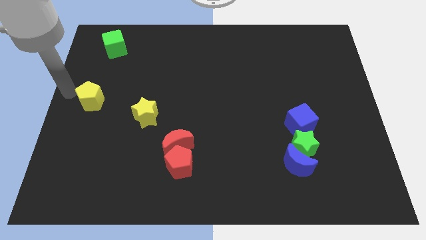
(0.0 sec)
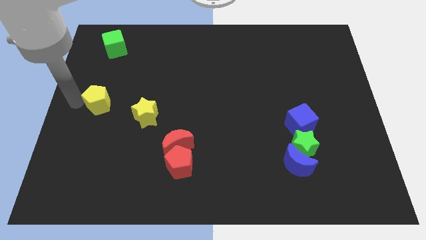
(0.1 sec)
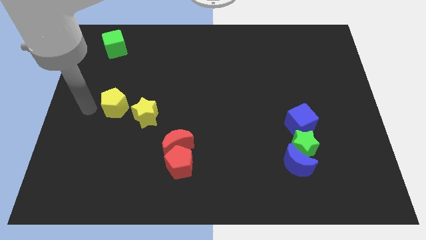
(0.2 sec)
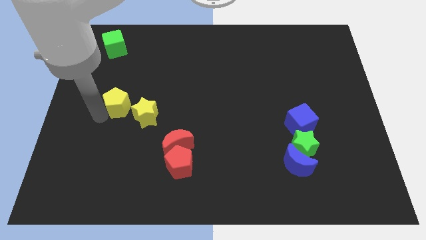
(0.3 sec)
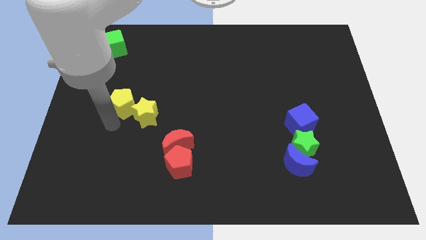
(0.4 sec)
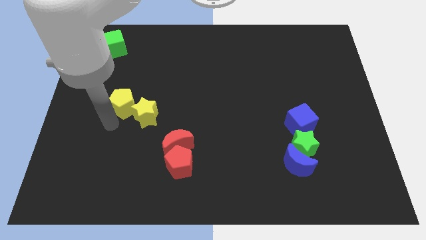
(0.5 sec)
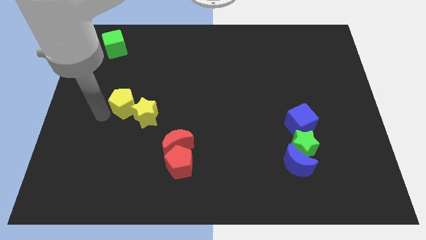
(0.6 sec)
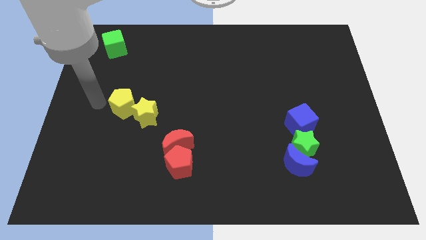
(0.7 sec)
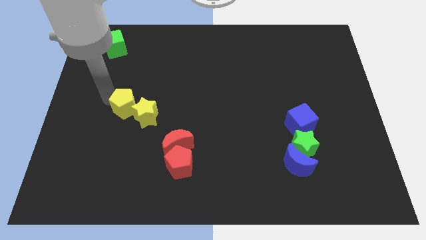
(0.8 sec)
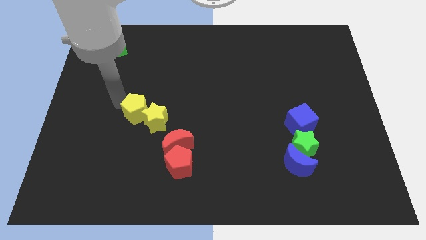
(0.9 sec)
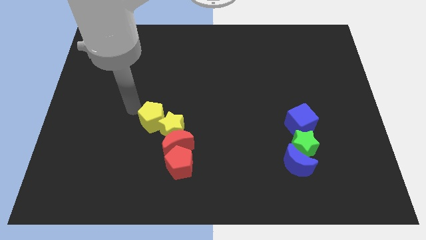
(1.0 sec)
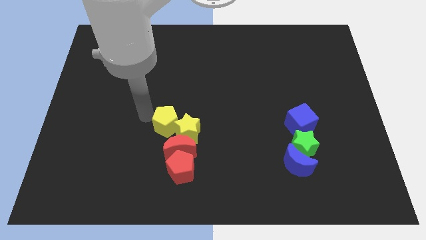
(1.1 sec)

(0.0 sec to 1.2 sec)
put yellow blocks together to the right of the board

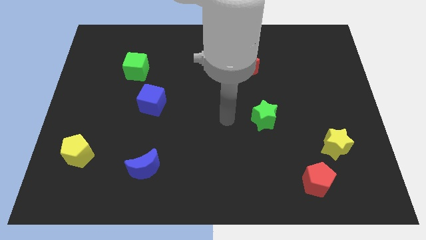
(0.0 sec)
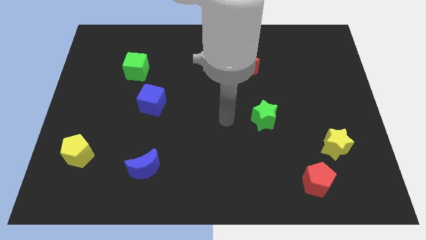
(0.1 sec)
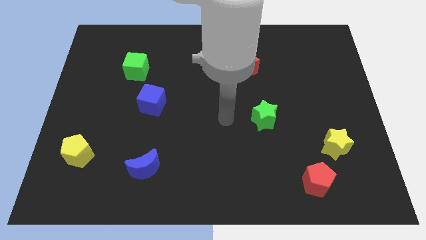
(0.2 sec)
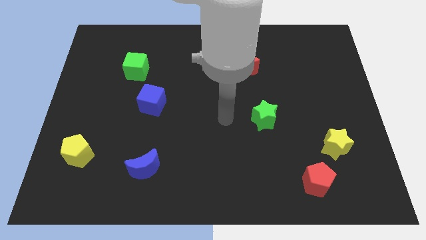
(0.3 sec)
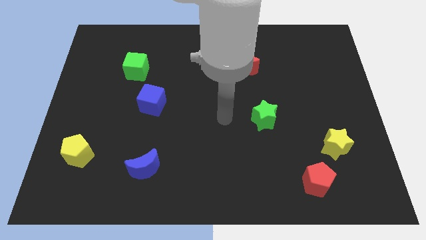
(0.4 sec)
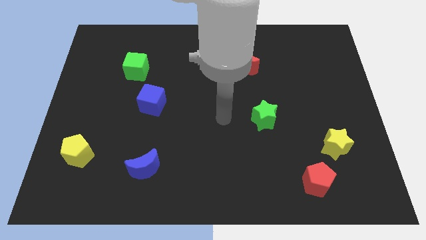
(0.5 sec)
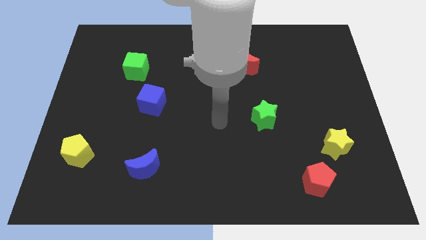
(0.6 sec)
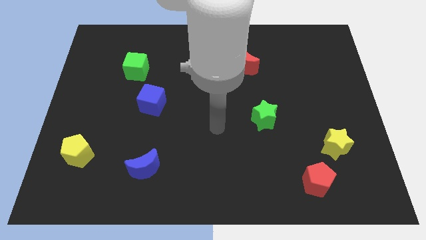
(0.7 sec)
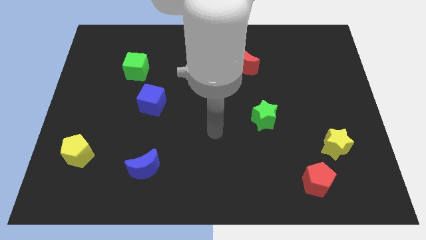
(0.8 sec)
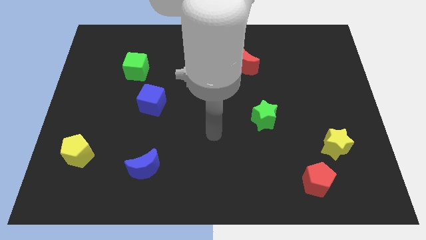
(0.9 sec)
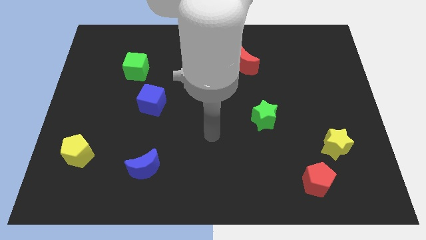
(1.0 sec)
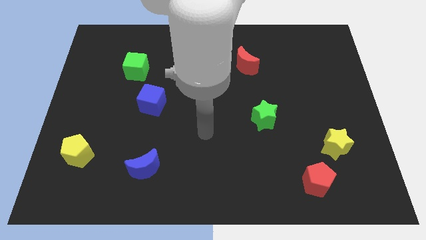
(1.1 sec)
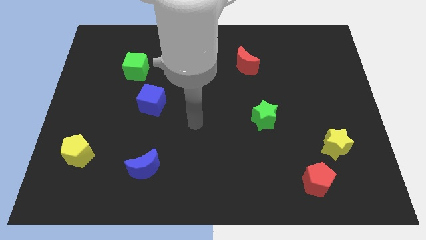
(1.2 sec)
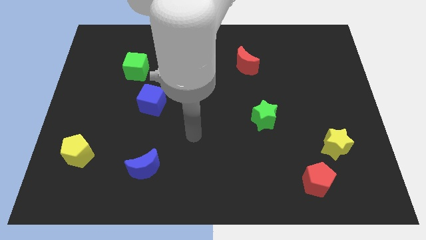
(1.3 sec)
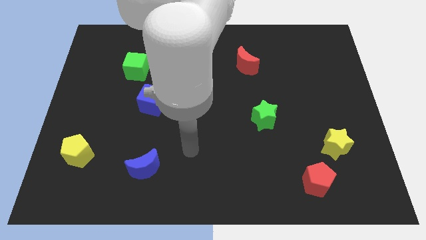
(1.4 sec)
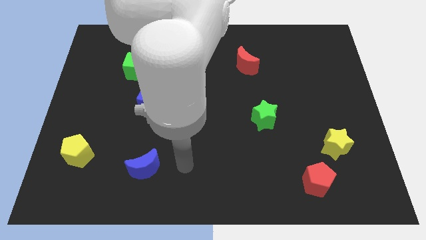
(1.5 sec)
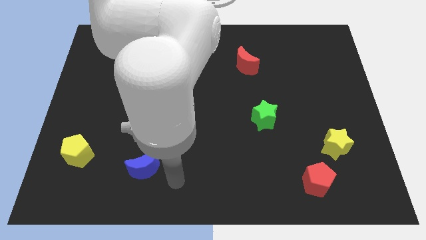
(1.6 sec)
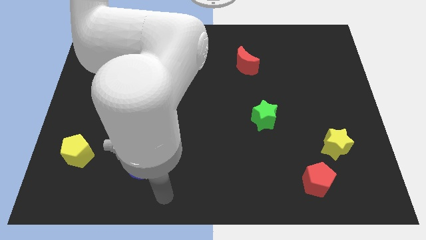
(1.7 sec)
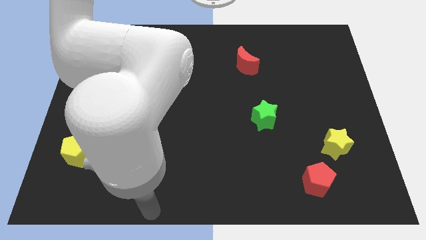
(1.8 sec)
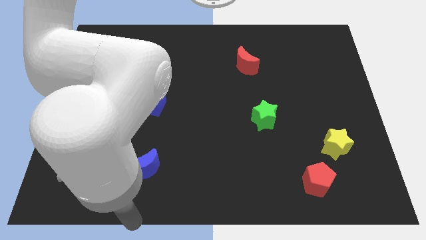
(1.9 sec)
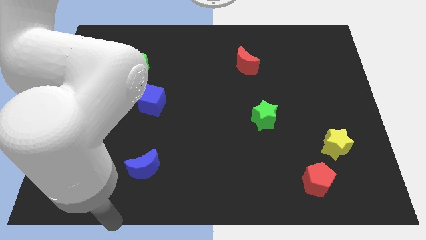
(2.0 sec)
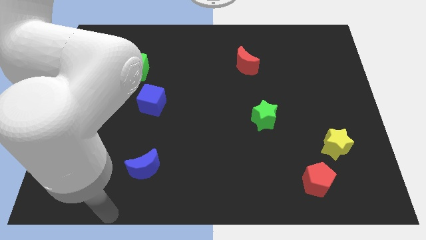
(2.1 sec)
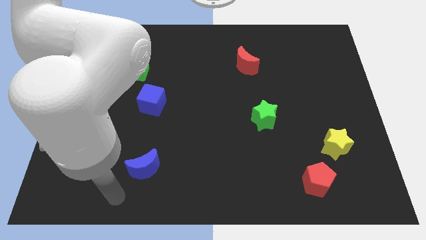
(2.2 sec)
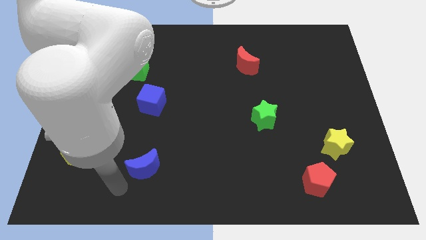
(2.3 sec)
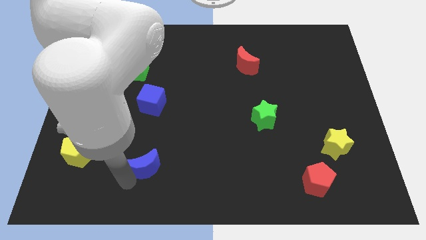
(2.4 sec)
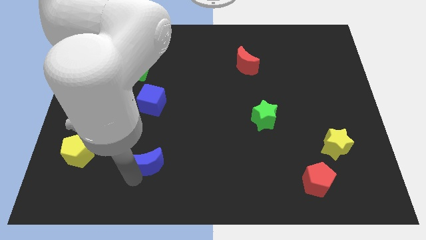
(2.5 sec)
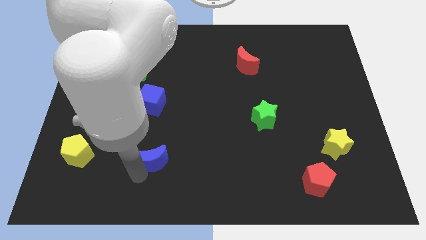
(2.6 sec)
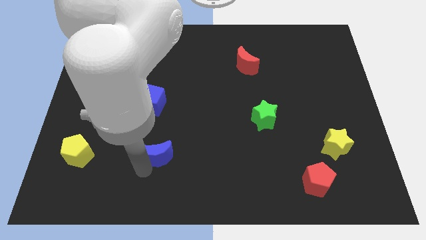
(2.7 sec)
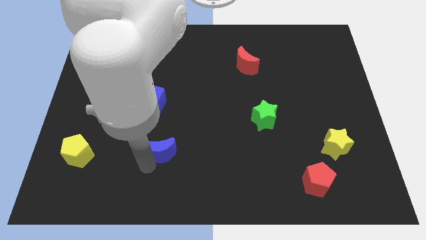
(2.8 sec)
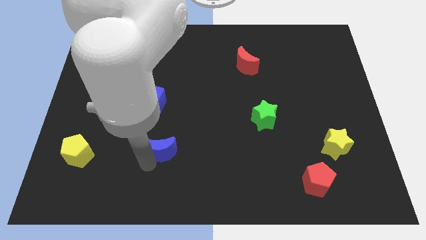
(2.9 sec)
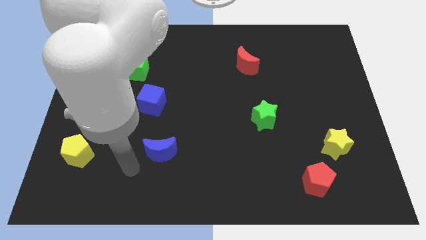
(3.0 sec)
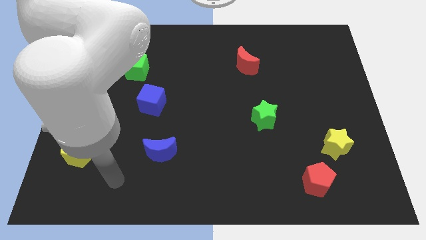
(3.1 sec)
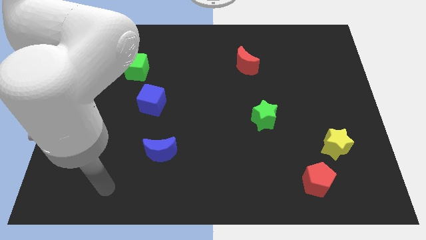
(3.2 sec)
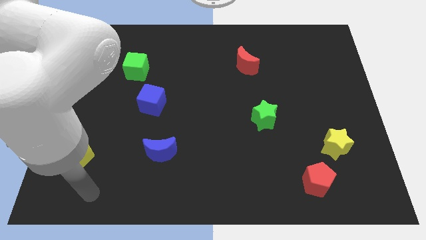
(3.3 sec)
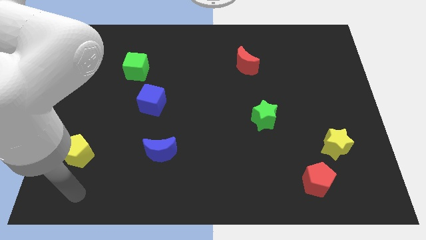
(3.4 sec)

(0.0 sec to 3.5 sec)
place the blue crescent parallel to the yellow pentagon

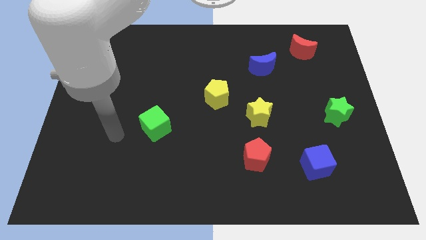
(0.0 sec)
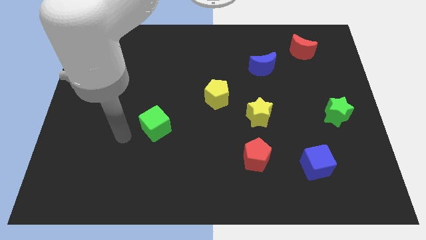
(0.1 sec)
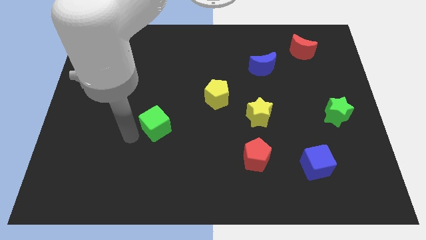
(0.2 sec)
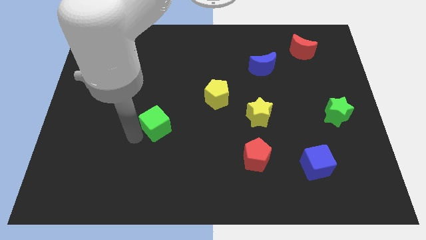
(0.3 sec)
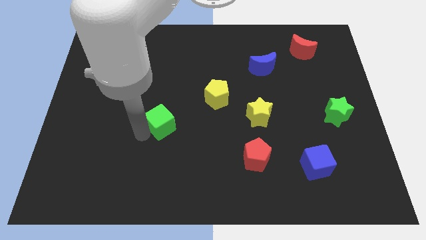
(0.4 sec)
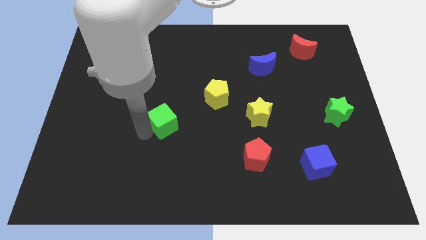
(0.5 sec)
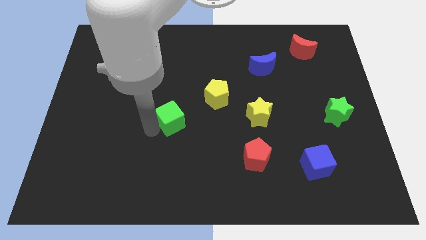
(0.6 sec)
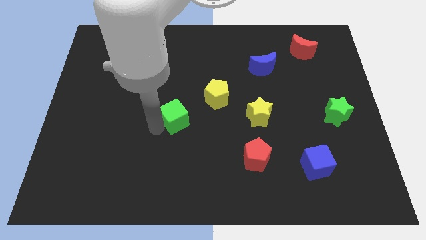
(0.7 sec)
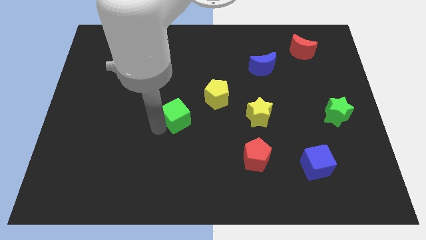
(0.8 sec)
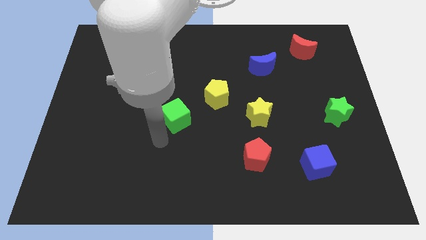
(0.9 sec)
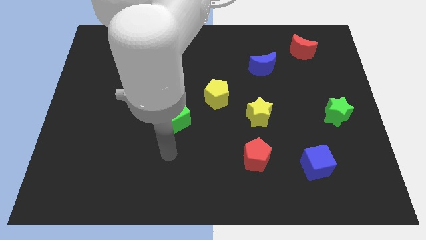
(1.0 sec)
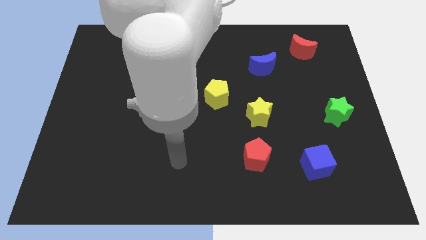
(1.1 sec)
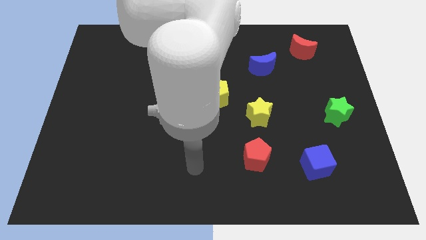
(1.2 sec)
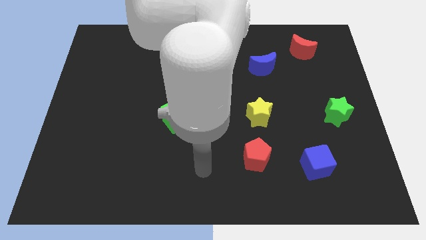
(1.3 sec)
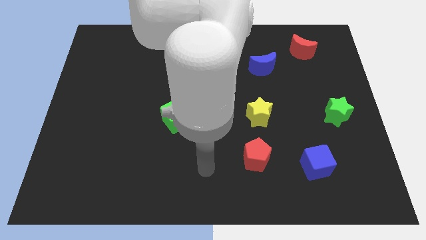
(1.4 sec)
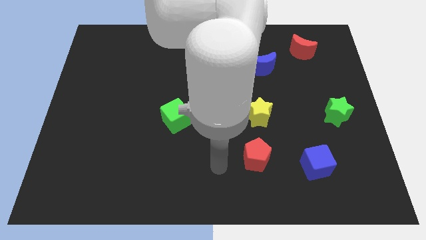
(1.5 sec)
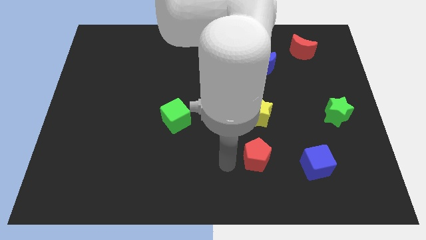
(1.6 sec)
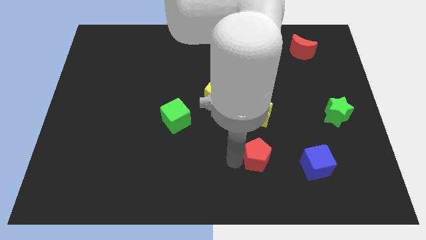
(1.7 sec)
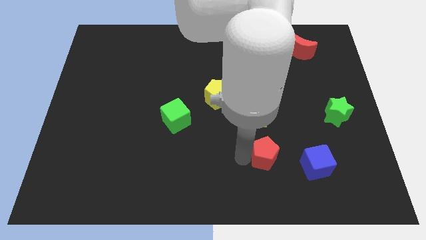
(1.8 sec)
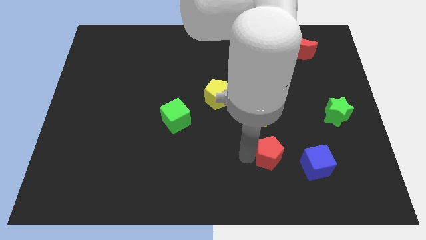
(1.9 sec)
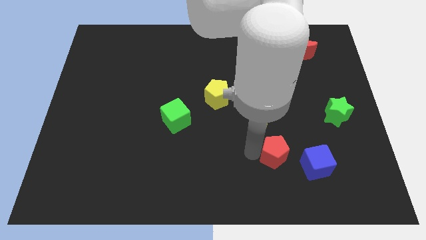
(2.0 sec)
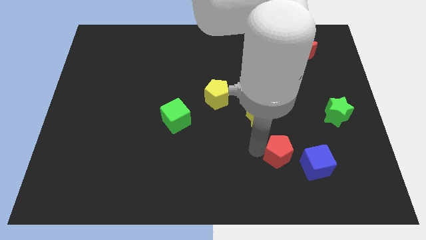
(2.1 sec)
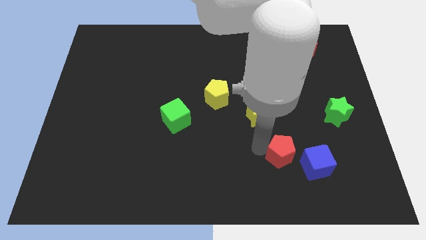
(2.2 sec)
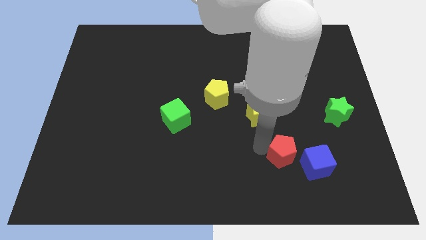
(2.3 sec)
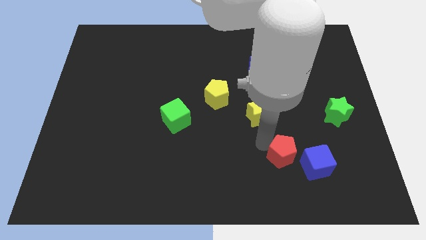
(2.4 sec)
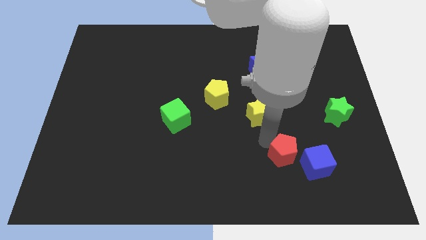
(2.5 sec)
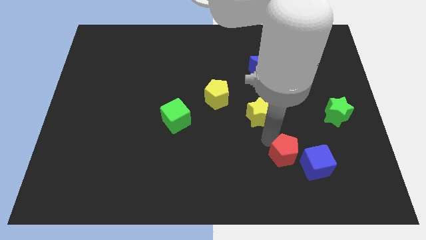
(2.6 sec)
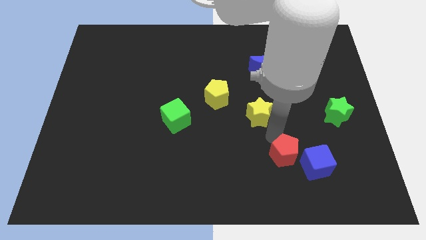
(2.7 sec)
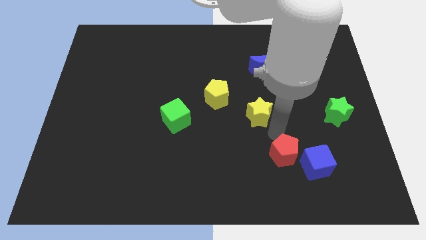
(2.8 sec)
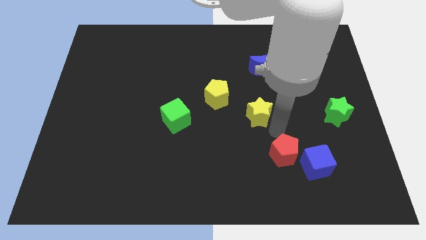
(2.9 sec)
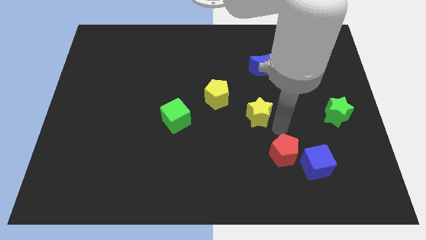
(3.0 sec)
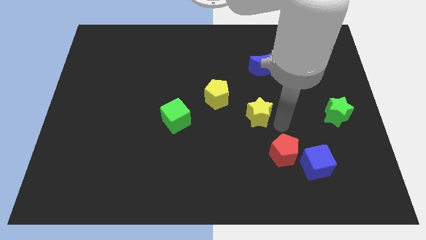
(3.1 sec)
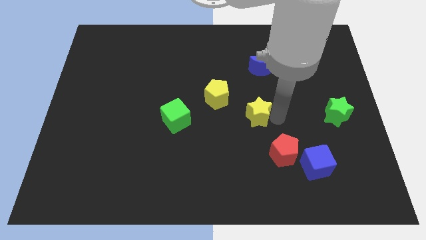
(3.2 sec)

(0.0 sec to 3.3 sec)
move red pentagon near to blue cube

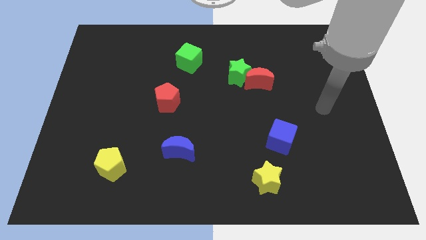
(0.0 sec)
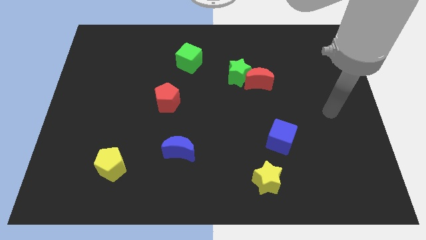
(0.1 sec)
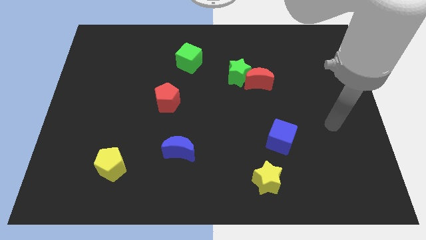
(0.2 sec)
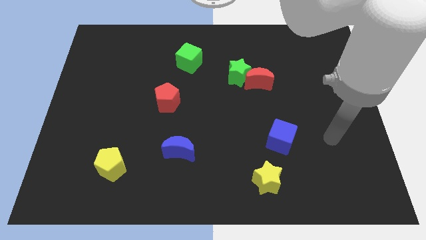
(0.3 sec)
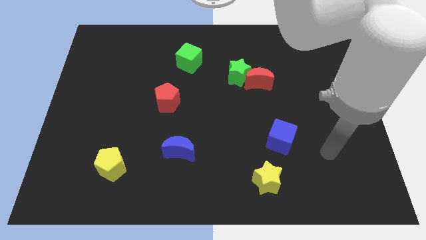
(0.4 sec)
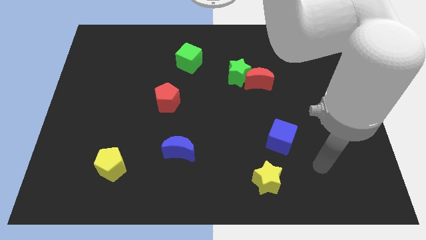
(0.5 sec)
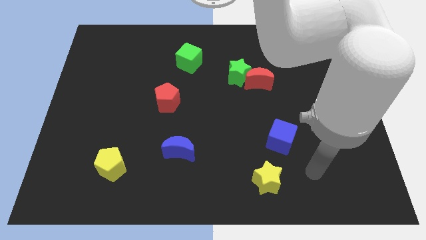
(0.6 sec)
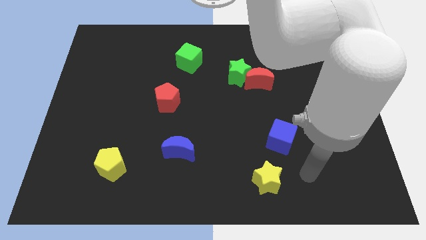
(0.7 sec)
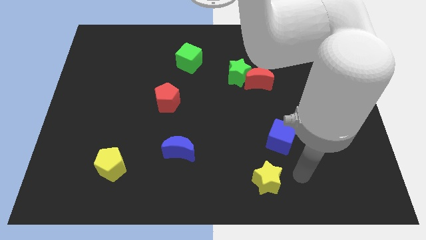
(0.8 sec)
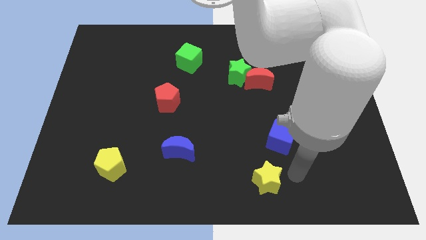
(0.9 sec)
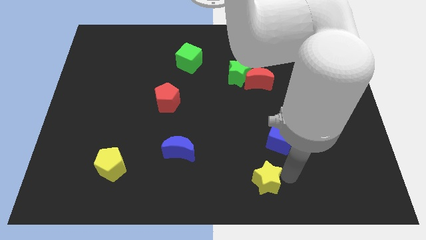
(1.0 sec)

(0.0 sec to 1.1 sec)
move your arm to the right side of the yellow star
